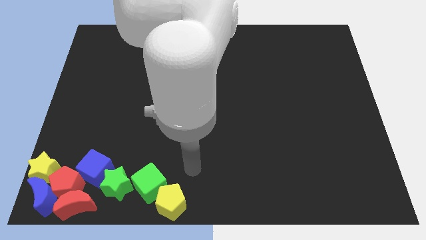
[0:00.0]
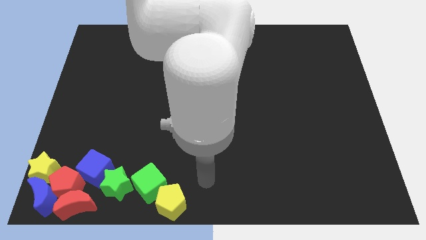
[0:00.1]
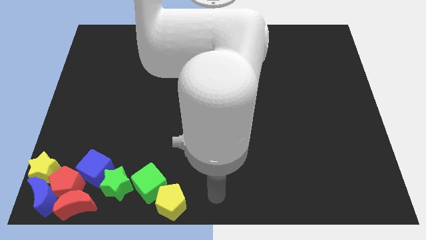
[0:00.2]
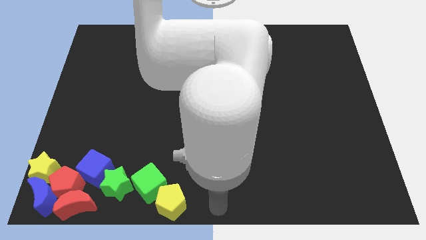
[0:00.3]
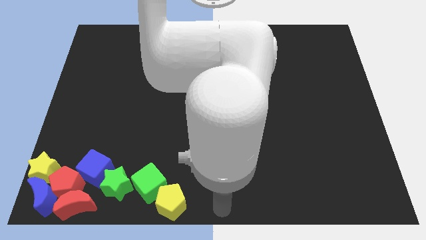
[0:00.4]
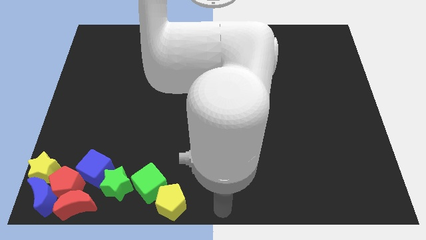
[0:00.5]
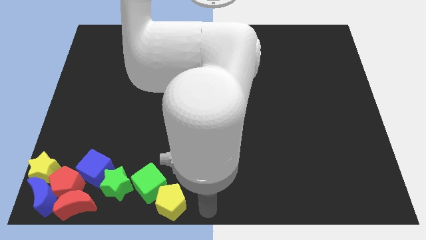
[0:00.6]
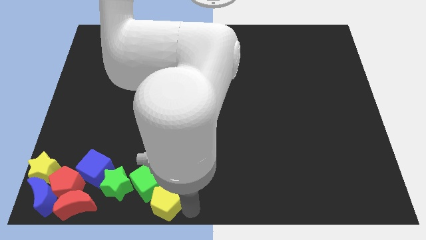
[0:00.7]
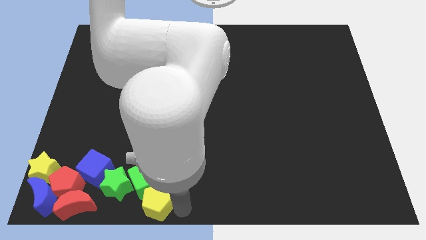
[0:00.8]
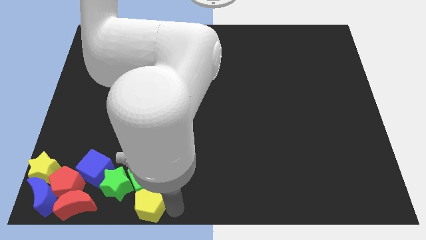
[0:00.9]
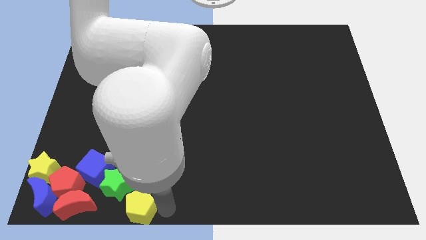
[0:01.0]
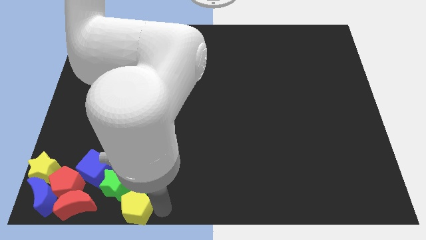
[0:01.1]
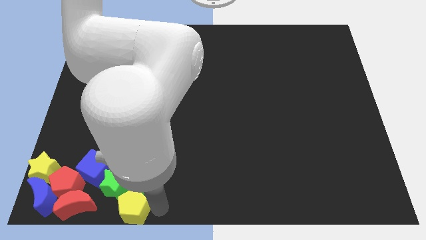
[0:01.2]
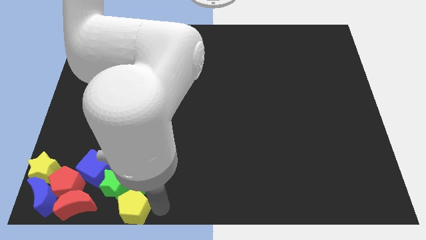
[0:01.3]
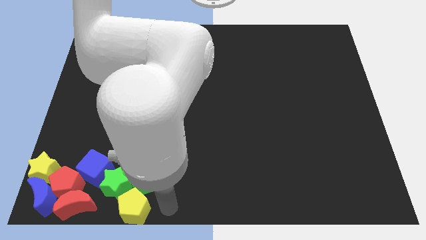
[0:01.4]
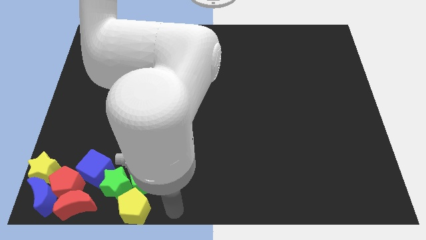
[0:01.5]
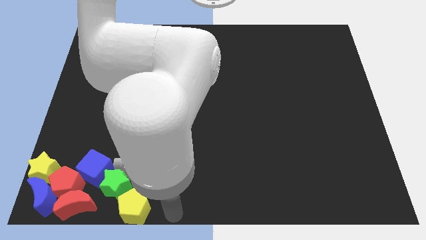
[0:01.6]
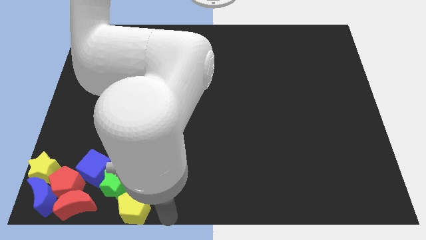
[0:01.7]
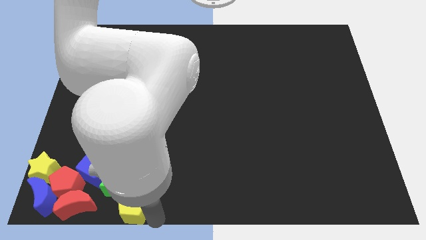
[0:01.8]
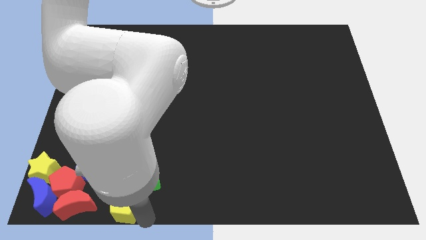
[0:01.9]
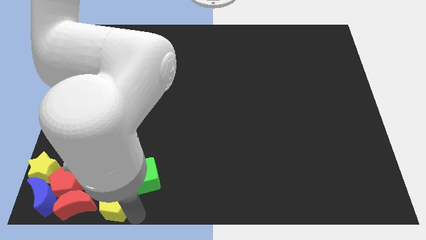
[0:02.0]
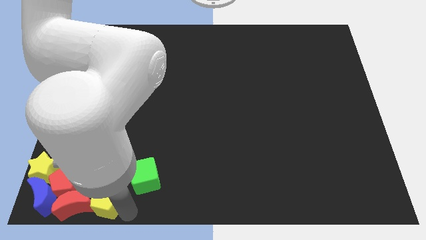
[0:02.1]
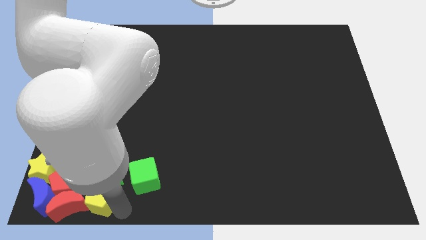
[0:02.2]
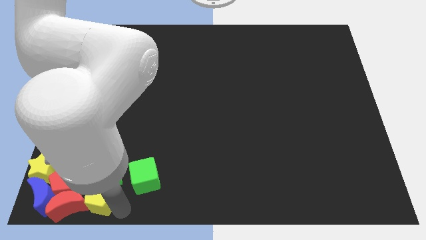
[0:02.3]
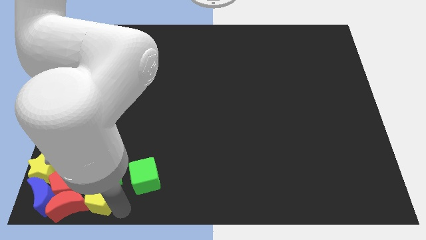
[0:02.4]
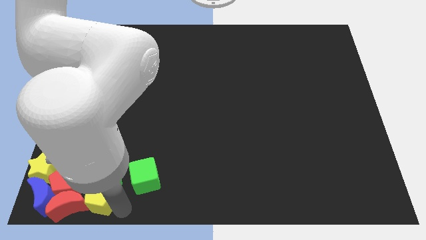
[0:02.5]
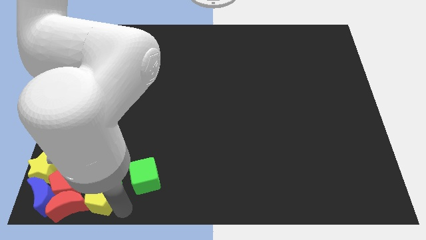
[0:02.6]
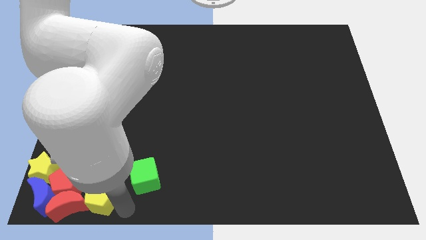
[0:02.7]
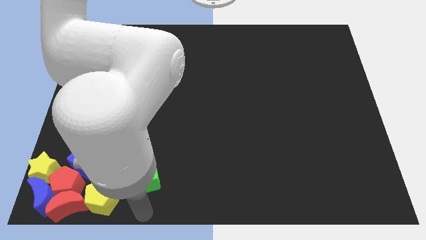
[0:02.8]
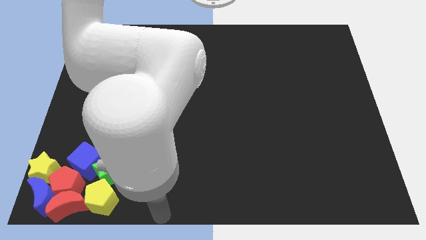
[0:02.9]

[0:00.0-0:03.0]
push the yellow pentagon into the red crescent

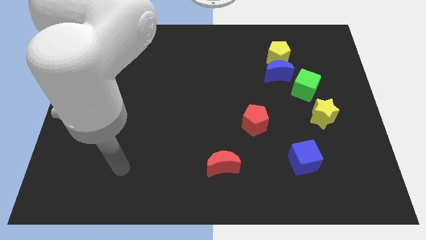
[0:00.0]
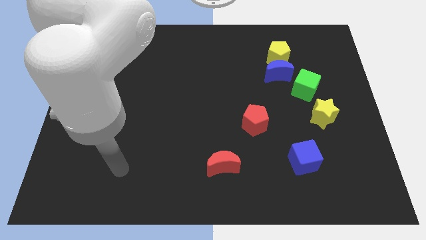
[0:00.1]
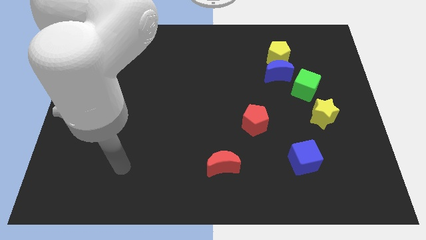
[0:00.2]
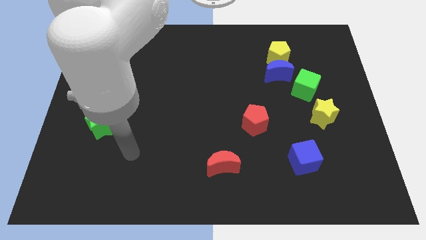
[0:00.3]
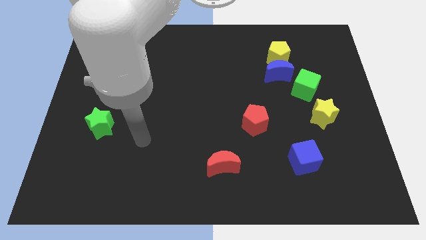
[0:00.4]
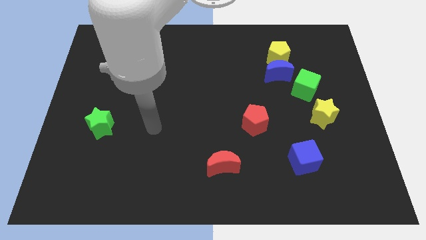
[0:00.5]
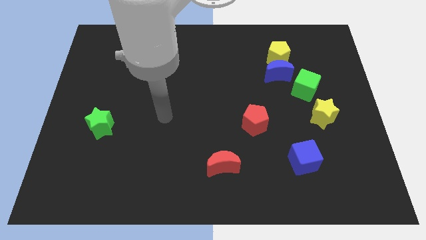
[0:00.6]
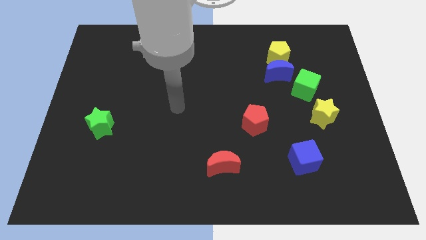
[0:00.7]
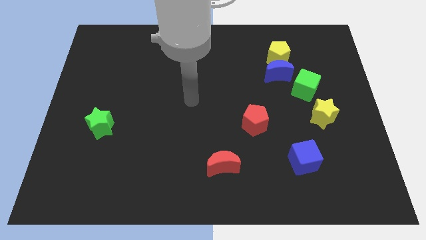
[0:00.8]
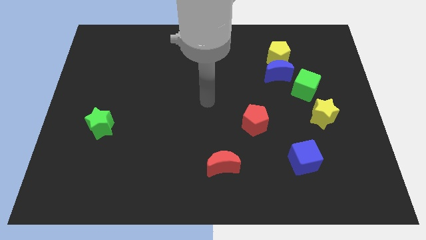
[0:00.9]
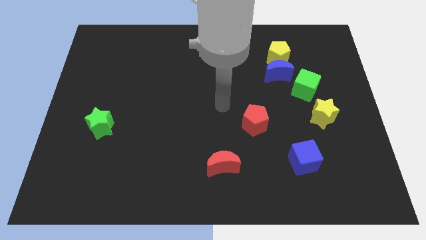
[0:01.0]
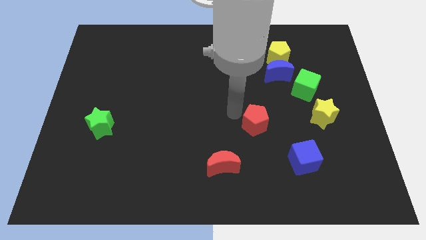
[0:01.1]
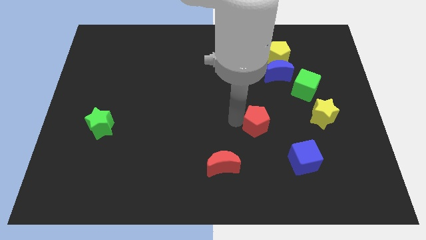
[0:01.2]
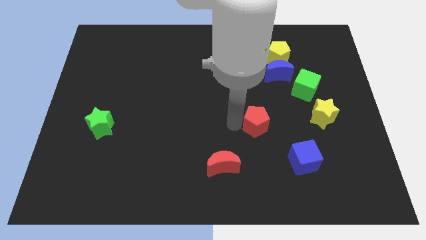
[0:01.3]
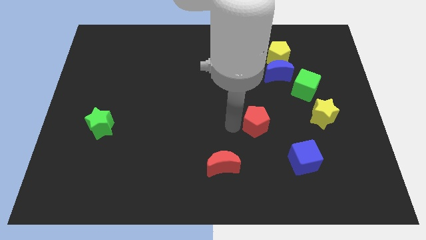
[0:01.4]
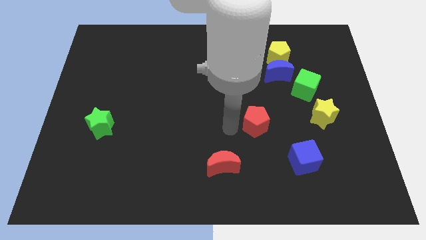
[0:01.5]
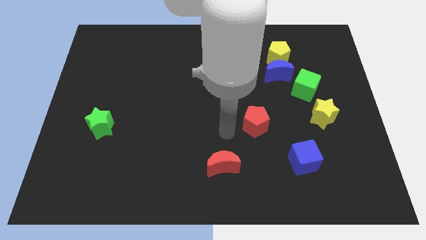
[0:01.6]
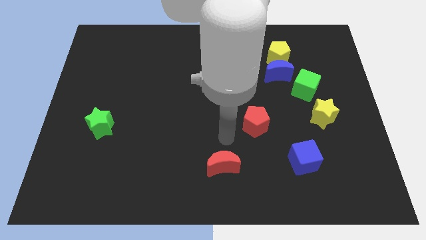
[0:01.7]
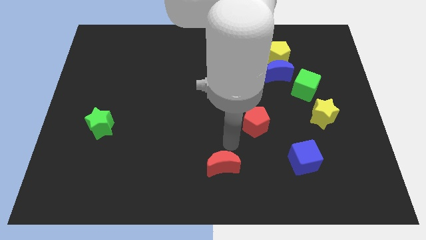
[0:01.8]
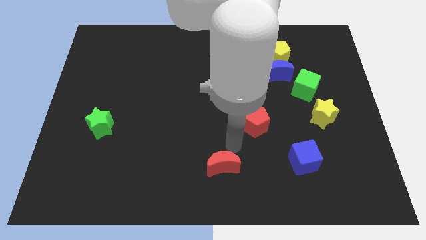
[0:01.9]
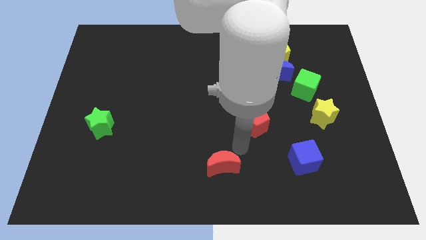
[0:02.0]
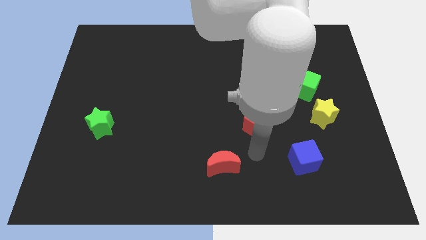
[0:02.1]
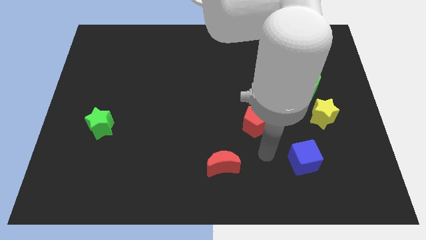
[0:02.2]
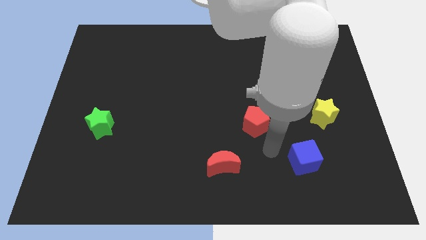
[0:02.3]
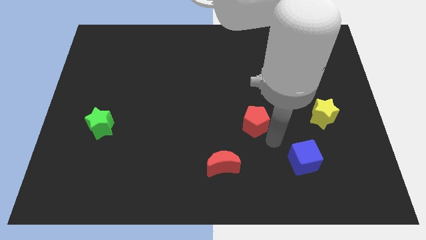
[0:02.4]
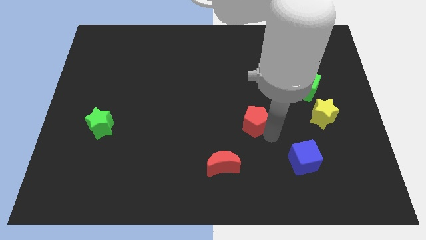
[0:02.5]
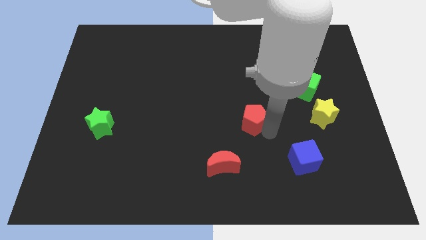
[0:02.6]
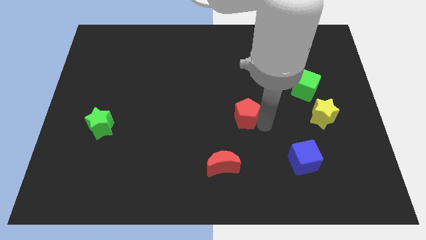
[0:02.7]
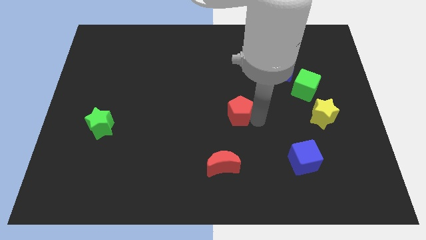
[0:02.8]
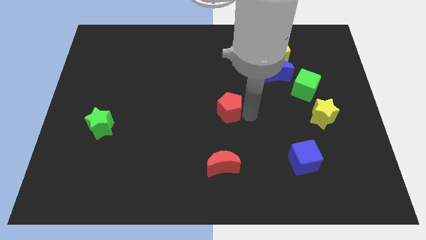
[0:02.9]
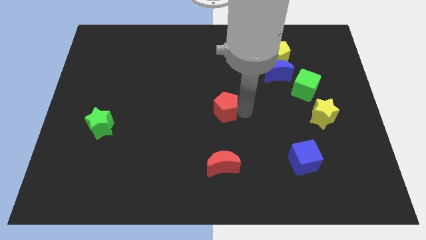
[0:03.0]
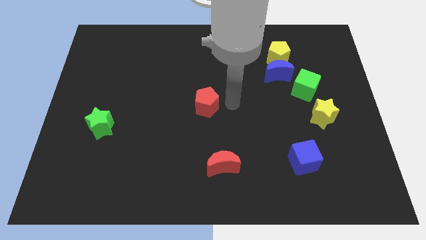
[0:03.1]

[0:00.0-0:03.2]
place the red pentagon vertically above the red moon

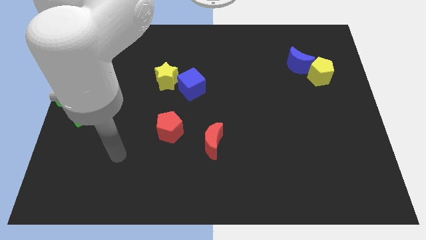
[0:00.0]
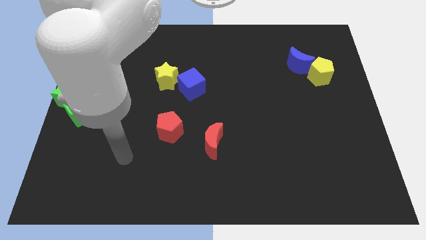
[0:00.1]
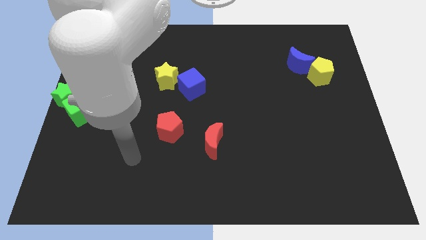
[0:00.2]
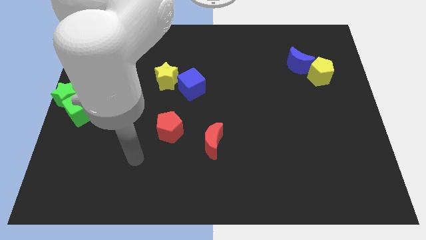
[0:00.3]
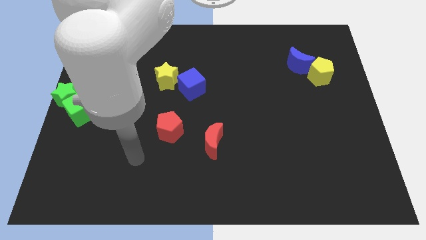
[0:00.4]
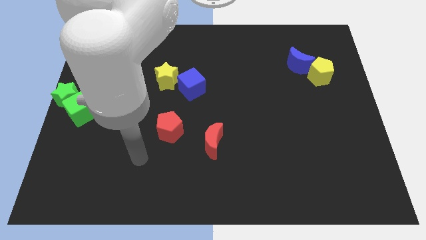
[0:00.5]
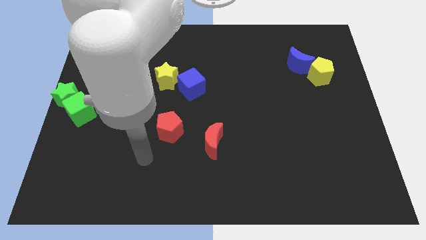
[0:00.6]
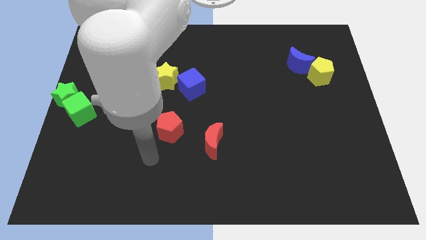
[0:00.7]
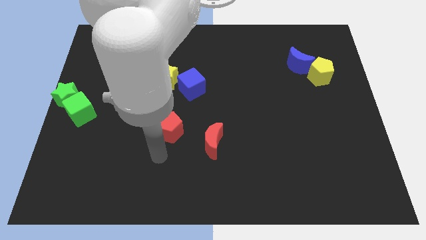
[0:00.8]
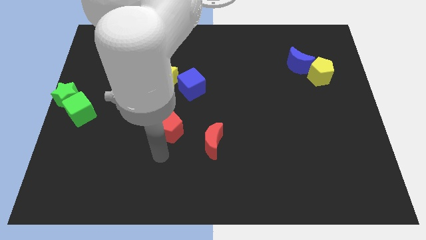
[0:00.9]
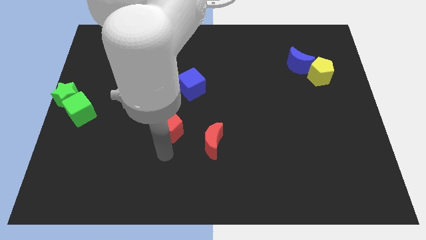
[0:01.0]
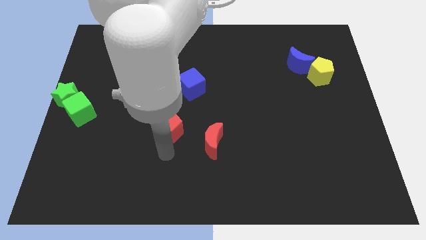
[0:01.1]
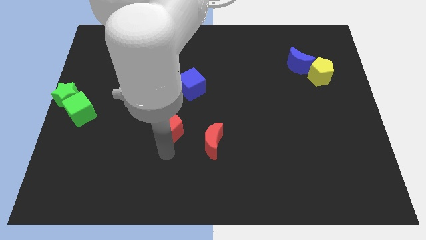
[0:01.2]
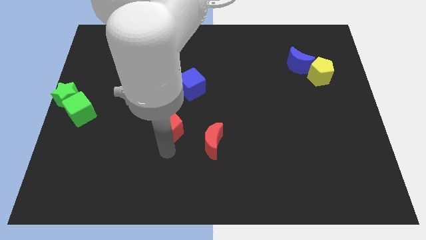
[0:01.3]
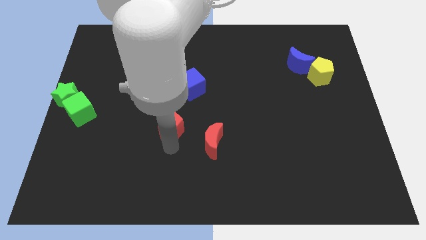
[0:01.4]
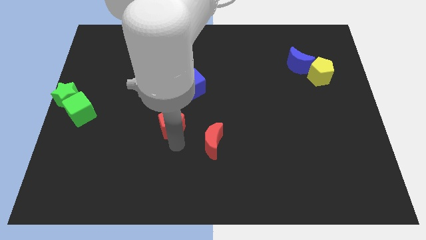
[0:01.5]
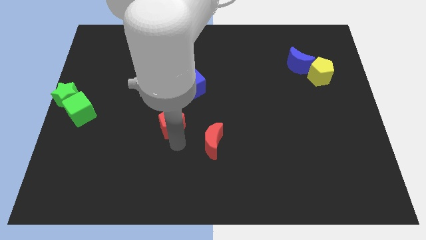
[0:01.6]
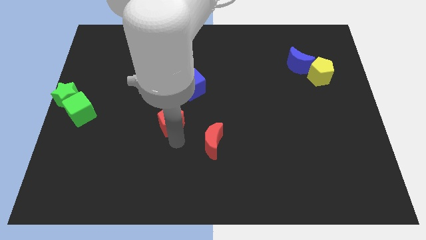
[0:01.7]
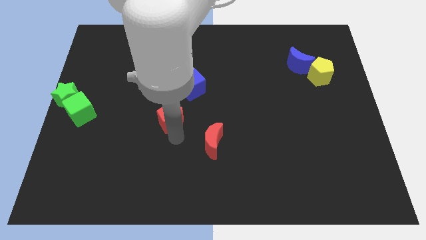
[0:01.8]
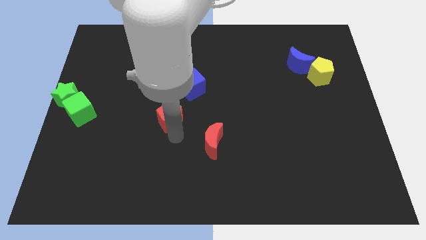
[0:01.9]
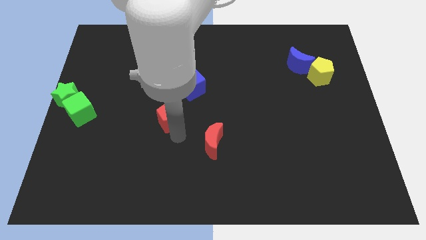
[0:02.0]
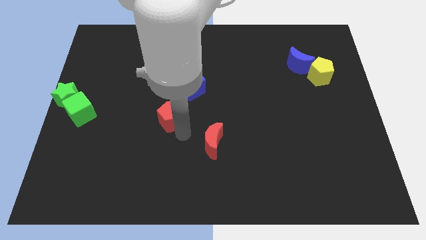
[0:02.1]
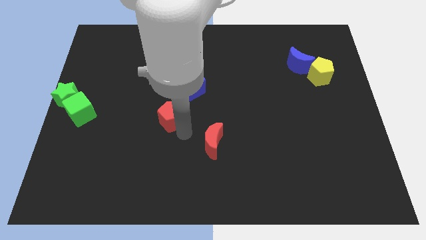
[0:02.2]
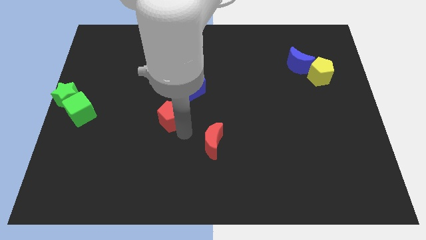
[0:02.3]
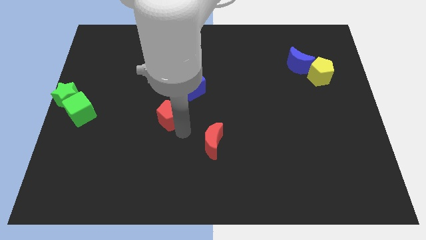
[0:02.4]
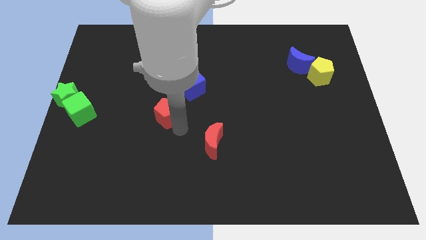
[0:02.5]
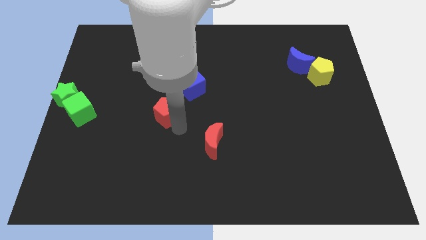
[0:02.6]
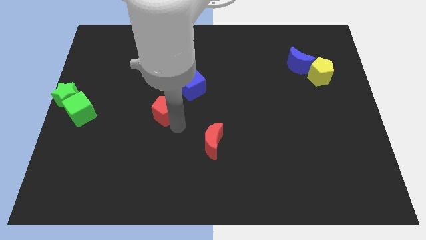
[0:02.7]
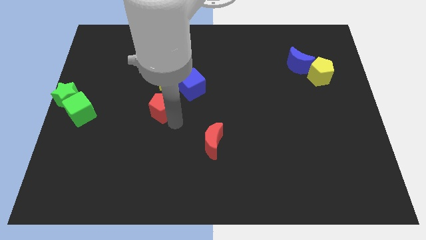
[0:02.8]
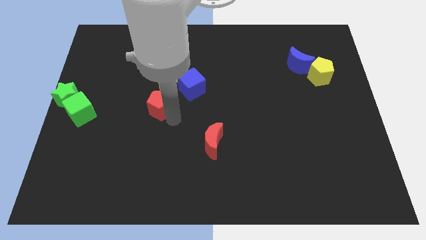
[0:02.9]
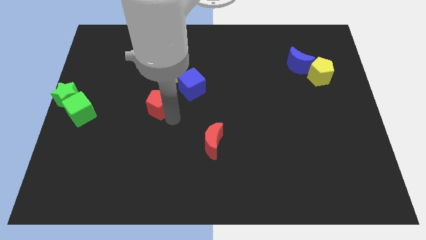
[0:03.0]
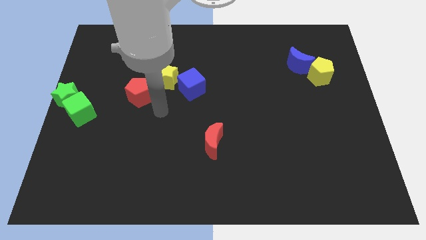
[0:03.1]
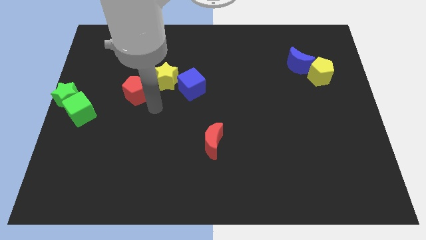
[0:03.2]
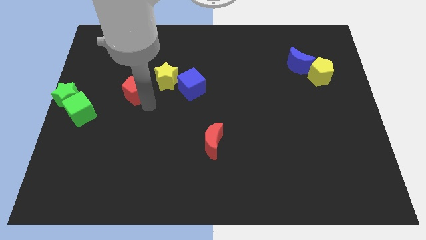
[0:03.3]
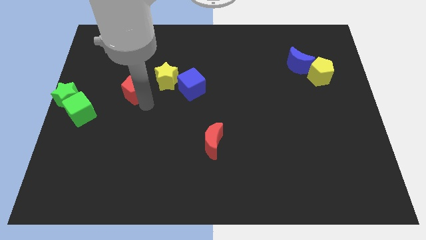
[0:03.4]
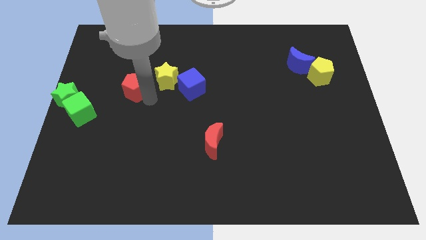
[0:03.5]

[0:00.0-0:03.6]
place the red pentagon diagonally top right to green cube
